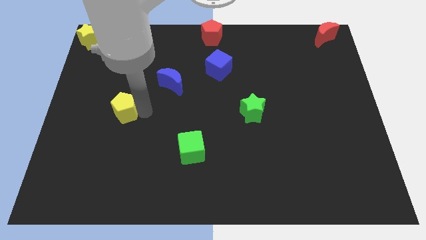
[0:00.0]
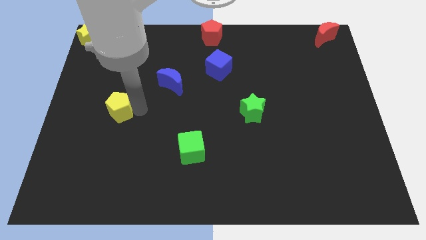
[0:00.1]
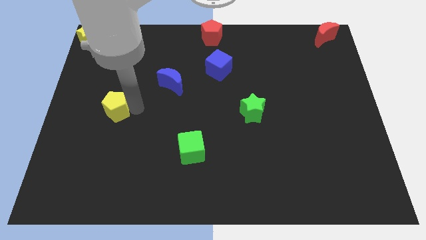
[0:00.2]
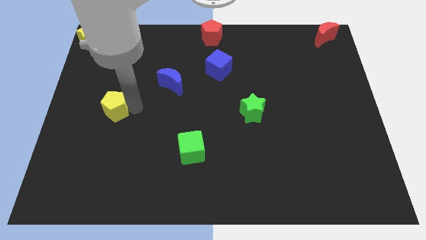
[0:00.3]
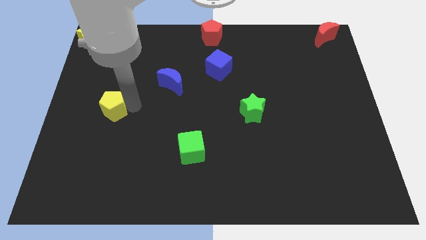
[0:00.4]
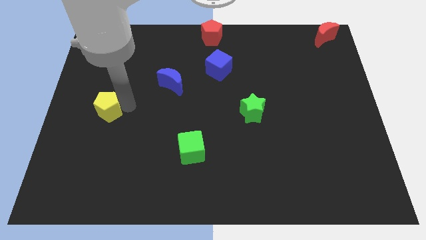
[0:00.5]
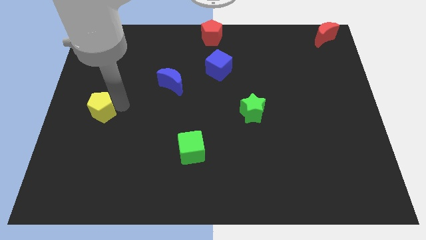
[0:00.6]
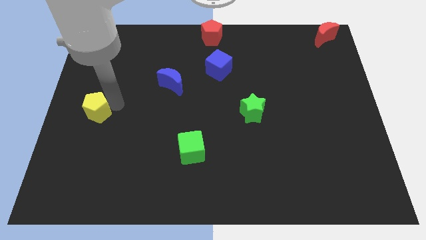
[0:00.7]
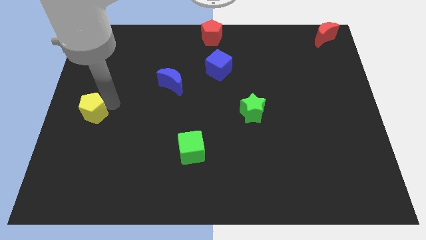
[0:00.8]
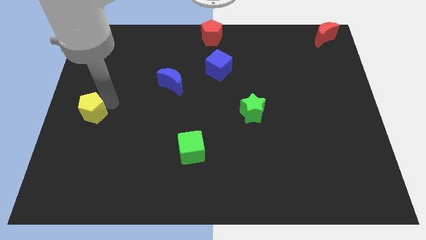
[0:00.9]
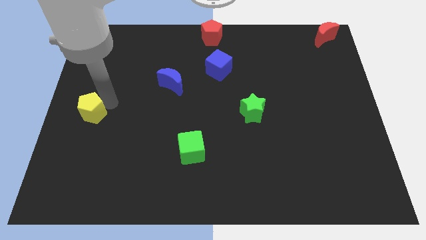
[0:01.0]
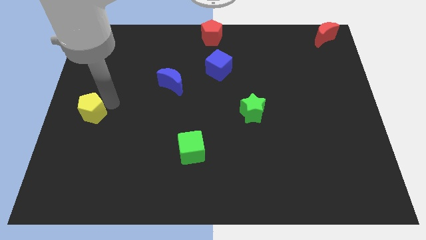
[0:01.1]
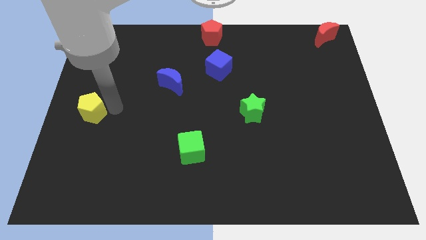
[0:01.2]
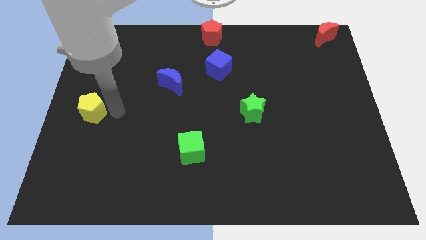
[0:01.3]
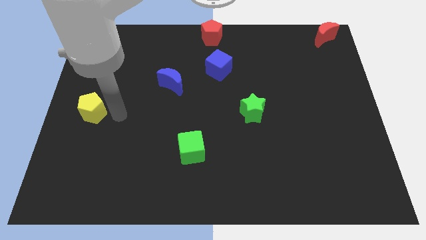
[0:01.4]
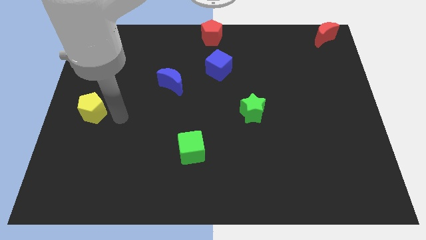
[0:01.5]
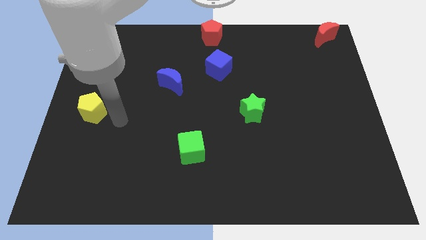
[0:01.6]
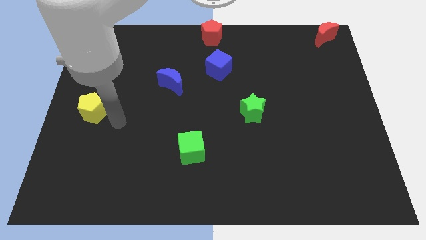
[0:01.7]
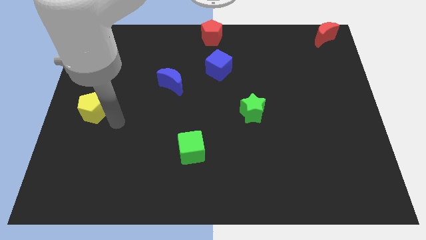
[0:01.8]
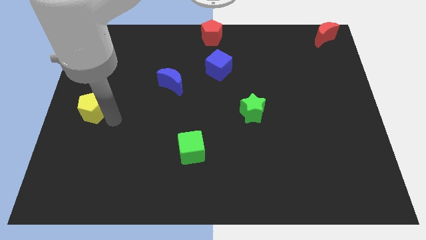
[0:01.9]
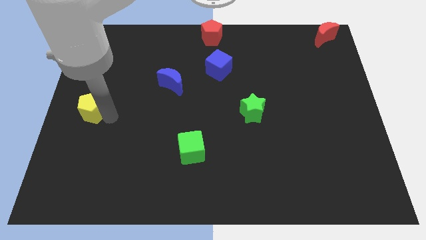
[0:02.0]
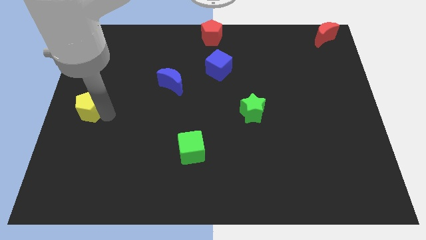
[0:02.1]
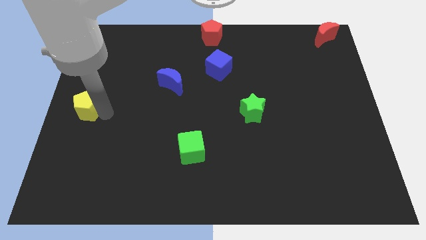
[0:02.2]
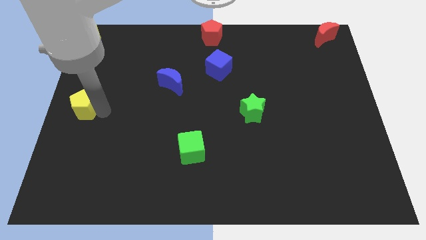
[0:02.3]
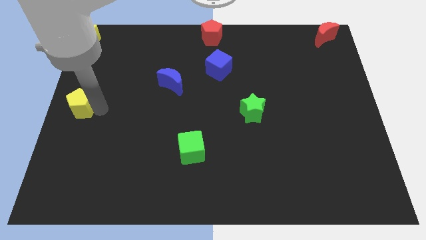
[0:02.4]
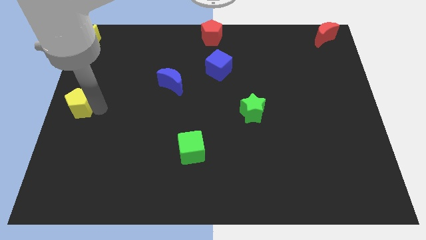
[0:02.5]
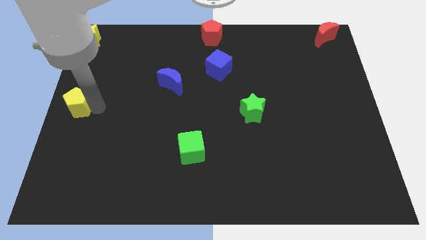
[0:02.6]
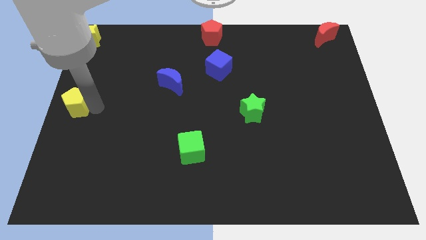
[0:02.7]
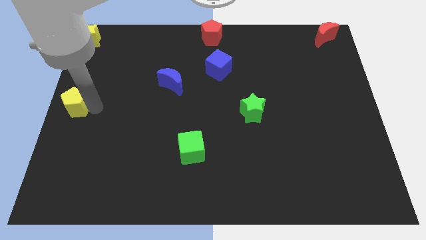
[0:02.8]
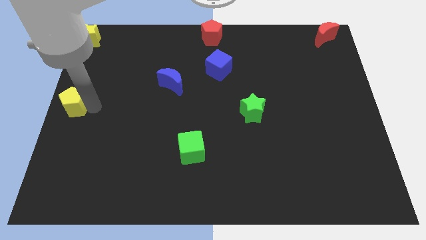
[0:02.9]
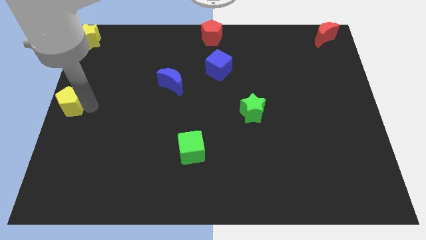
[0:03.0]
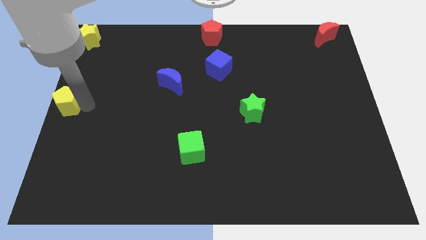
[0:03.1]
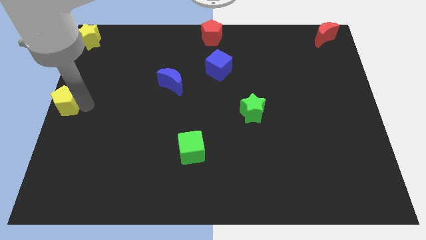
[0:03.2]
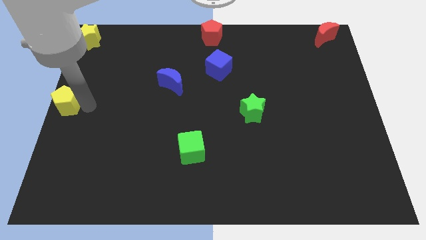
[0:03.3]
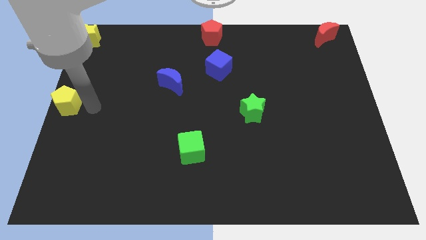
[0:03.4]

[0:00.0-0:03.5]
place yellow pentagon on the left center of the board

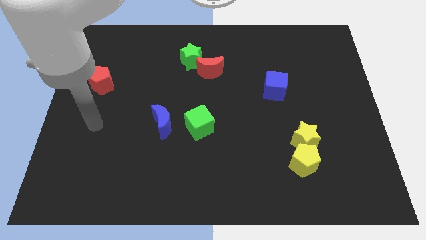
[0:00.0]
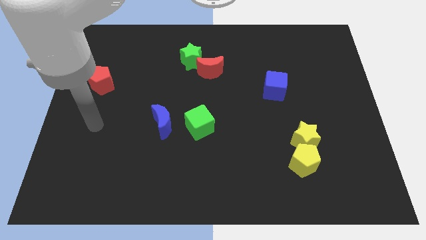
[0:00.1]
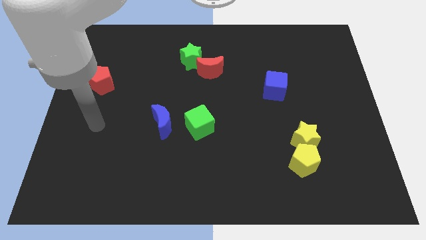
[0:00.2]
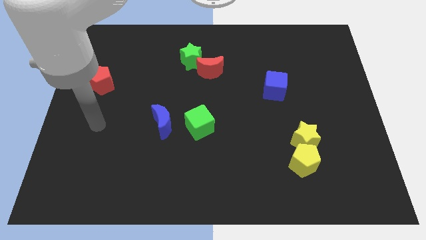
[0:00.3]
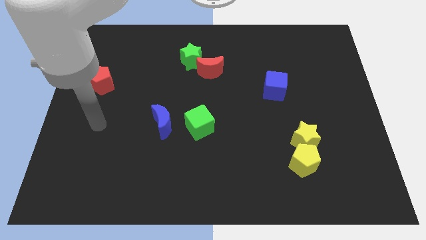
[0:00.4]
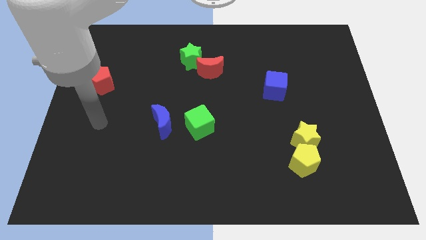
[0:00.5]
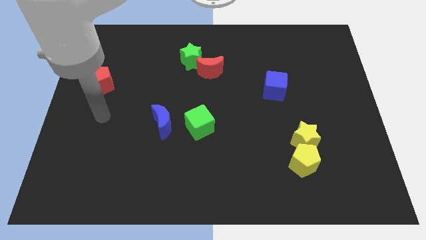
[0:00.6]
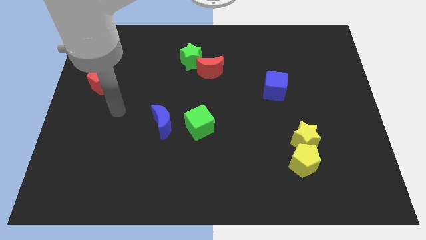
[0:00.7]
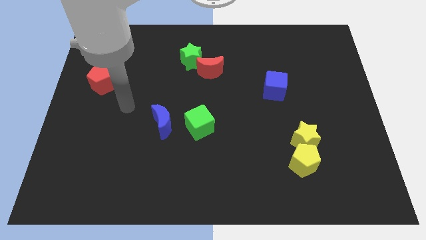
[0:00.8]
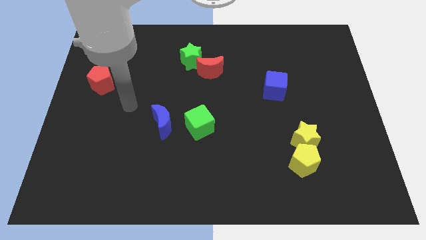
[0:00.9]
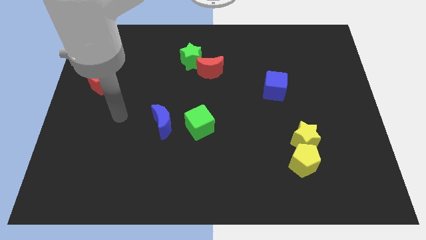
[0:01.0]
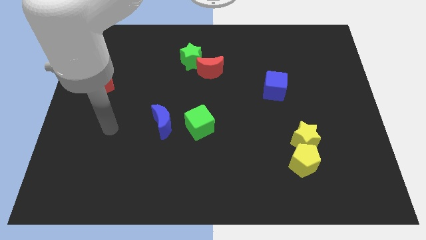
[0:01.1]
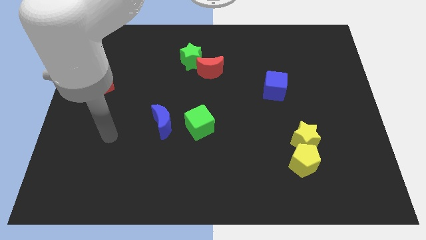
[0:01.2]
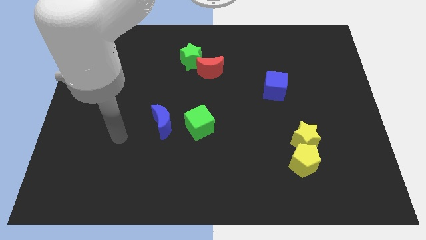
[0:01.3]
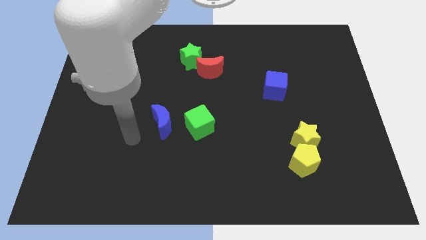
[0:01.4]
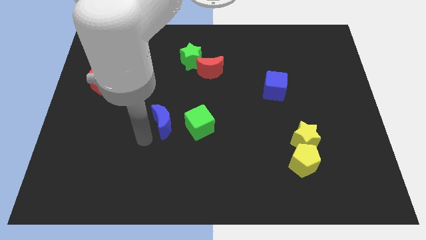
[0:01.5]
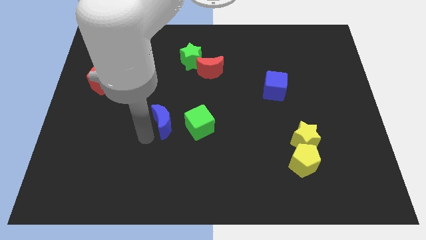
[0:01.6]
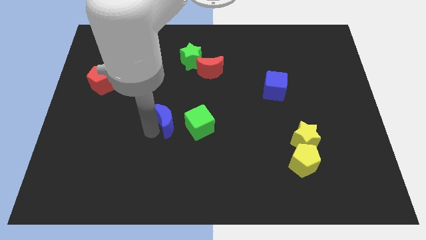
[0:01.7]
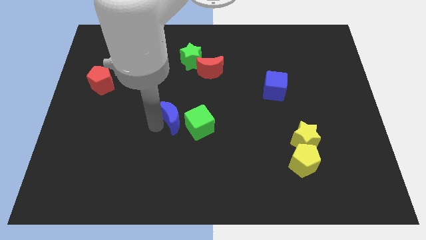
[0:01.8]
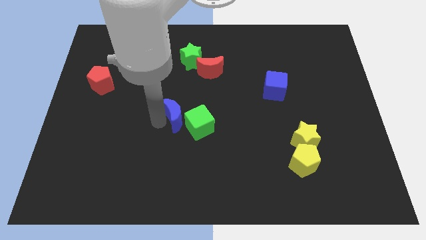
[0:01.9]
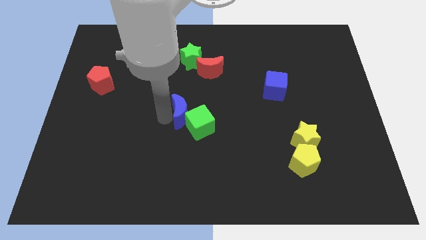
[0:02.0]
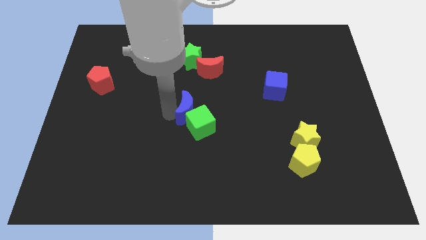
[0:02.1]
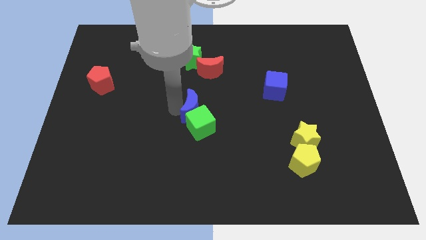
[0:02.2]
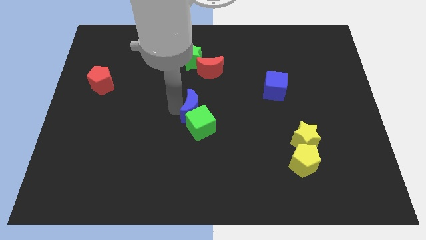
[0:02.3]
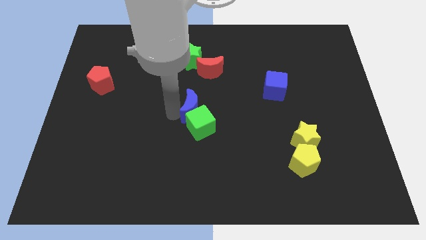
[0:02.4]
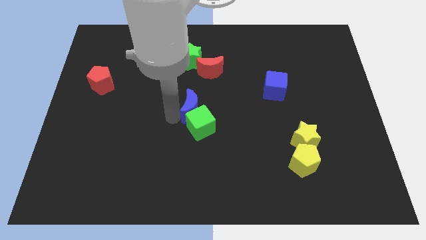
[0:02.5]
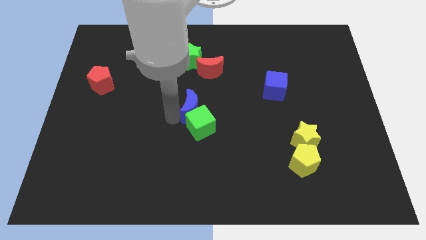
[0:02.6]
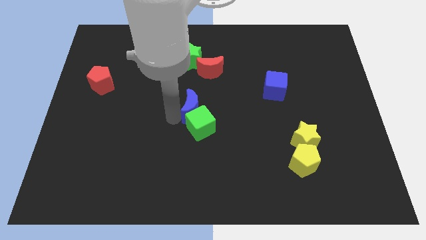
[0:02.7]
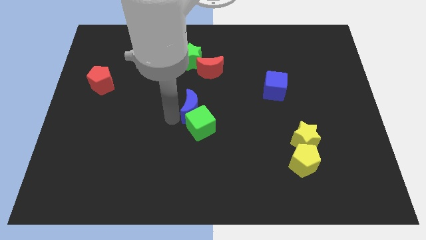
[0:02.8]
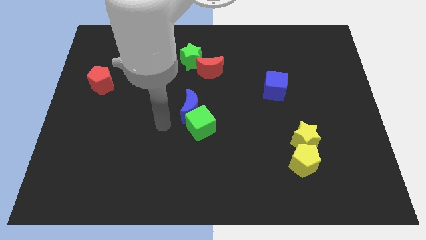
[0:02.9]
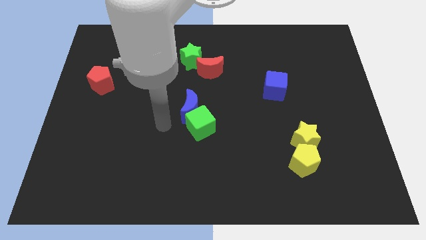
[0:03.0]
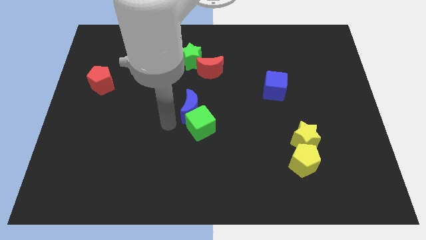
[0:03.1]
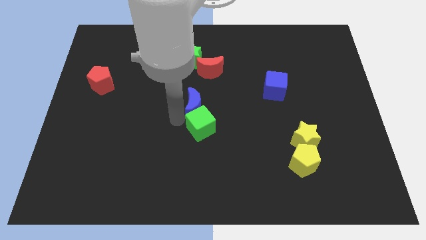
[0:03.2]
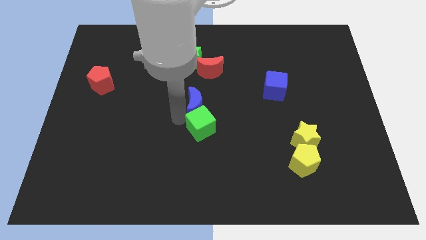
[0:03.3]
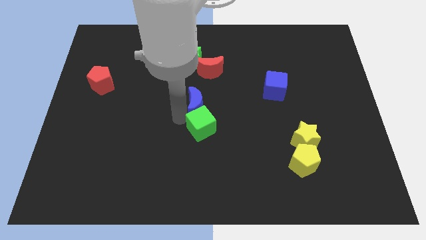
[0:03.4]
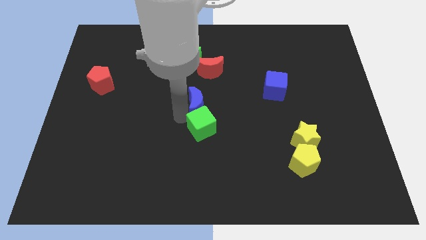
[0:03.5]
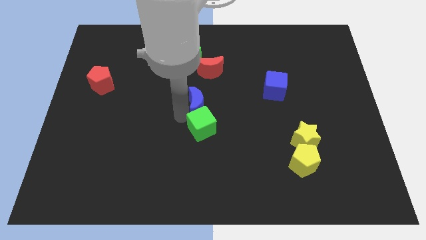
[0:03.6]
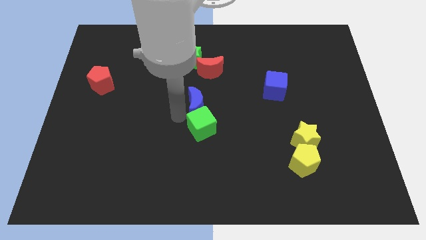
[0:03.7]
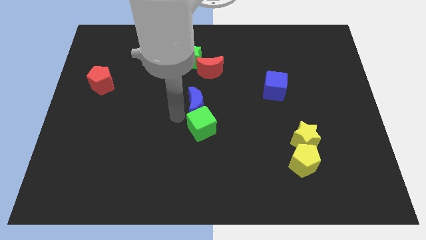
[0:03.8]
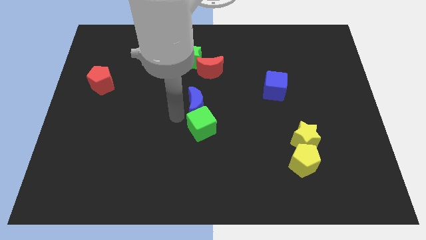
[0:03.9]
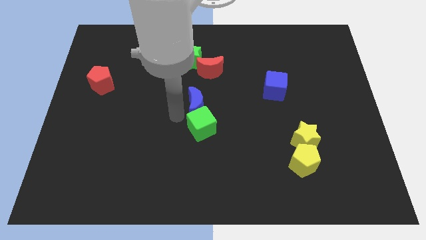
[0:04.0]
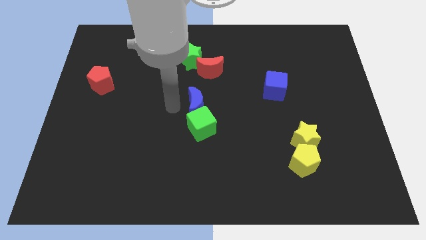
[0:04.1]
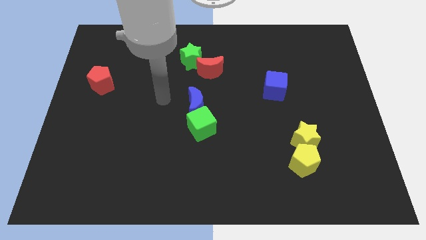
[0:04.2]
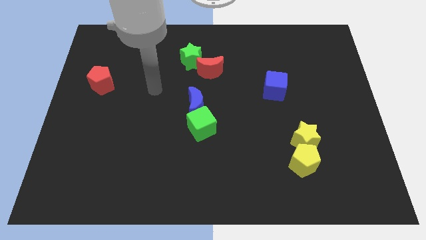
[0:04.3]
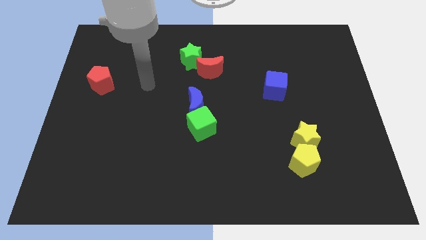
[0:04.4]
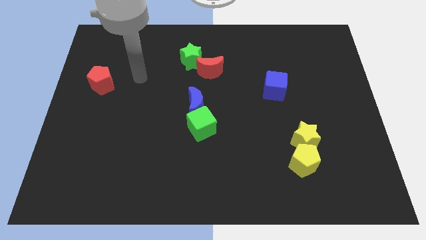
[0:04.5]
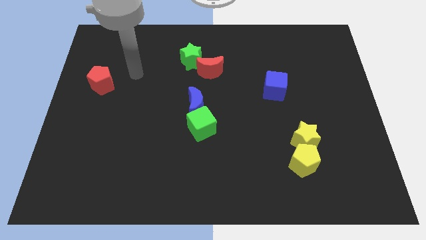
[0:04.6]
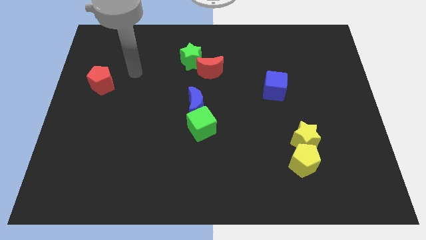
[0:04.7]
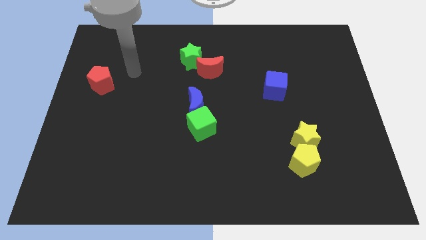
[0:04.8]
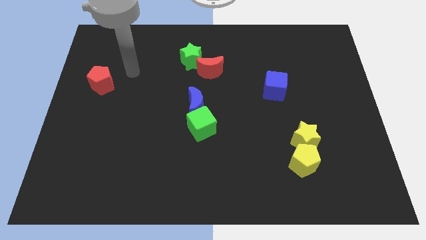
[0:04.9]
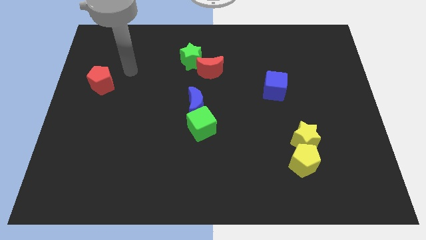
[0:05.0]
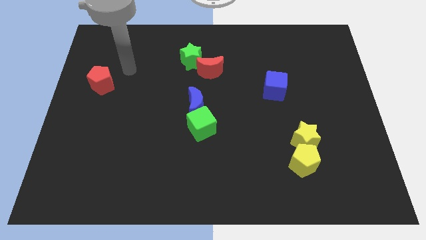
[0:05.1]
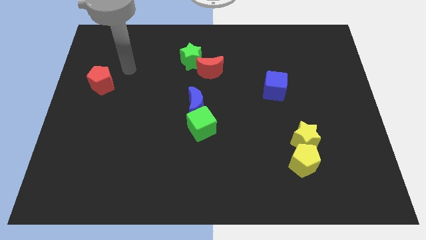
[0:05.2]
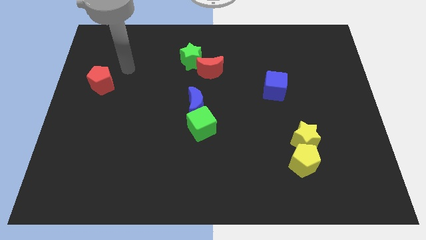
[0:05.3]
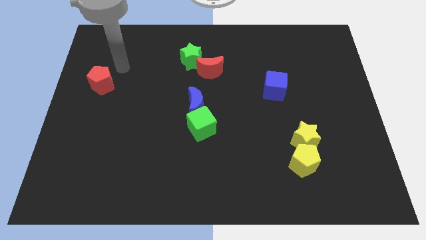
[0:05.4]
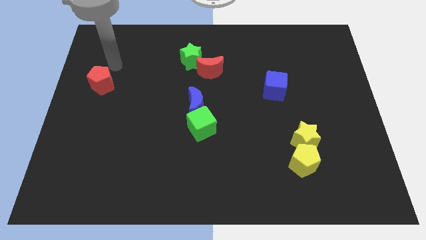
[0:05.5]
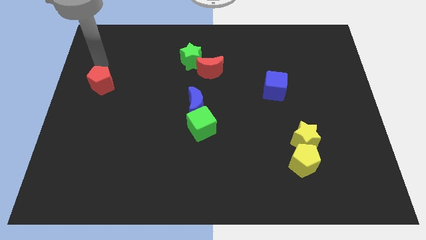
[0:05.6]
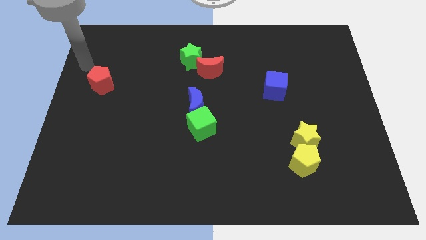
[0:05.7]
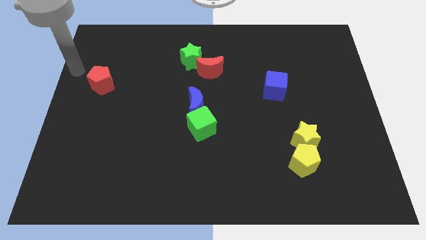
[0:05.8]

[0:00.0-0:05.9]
move the blue crescent to the center of the board
